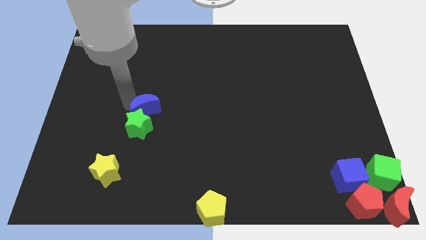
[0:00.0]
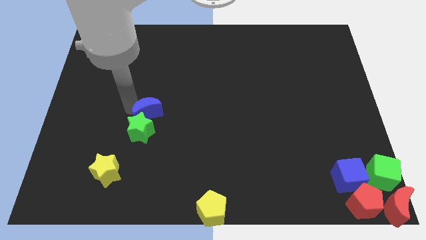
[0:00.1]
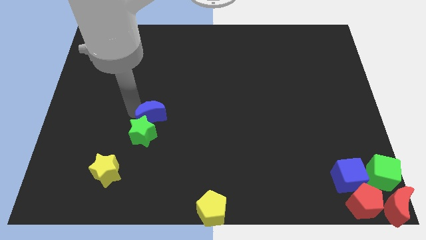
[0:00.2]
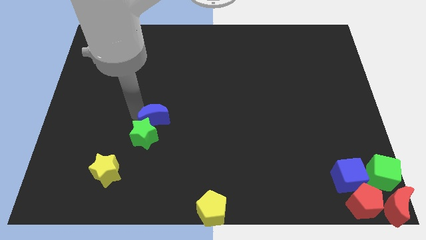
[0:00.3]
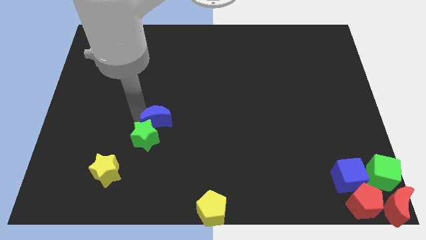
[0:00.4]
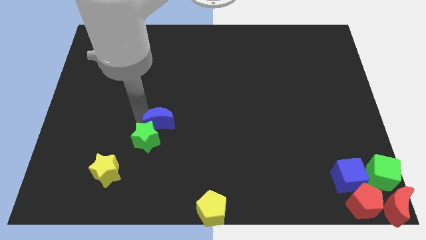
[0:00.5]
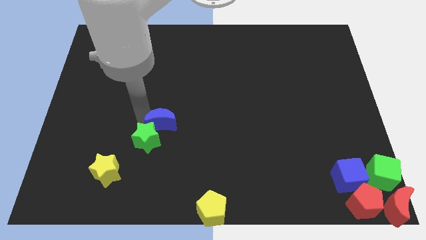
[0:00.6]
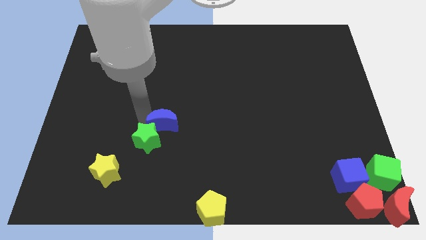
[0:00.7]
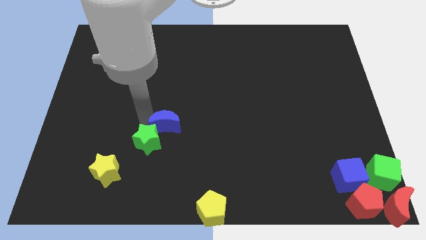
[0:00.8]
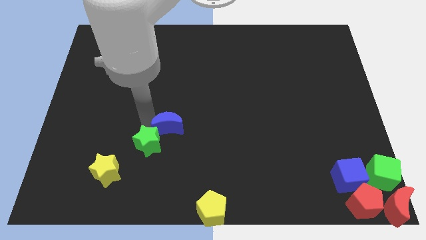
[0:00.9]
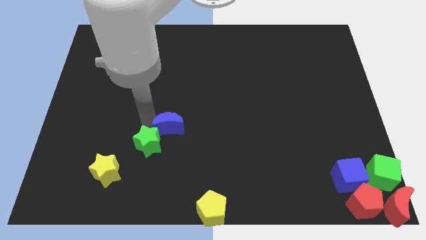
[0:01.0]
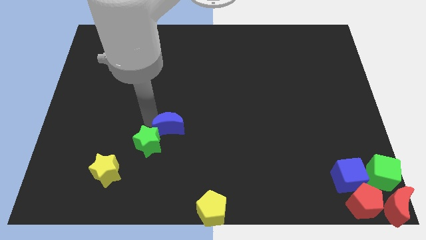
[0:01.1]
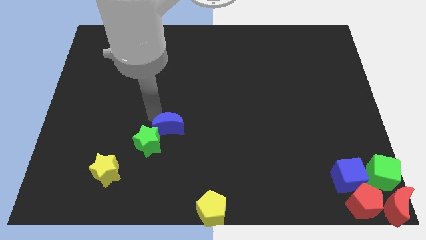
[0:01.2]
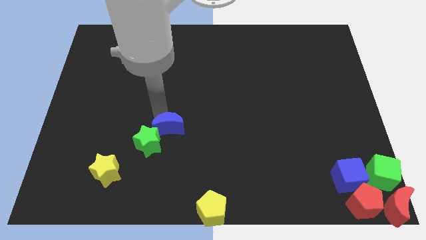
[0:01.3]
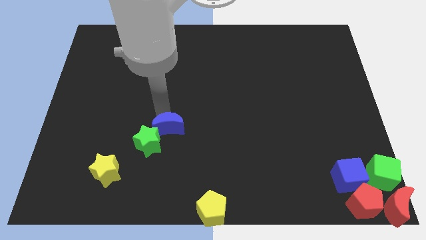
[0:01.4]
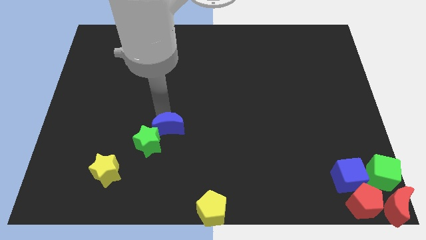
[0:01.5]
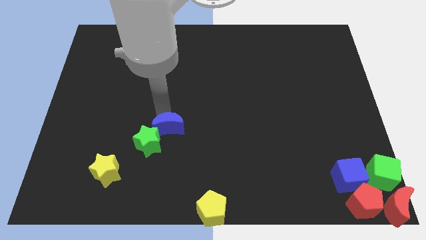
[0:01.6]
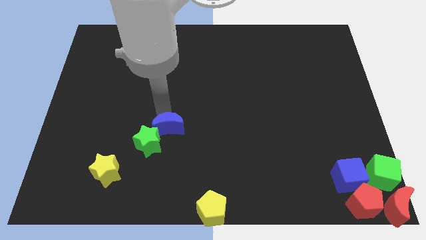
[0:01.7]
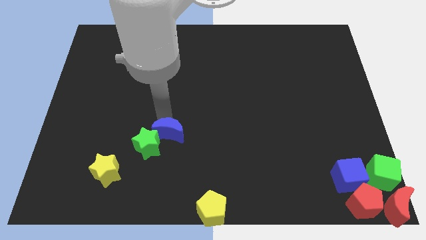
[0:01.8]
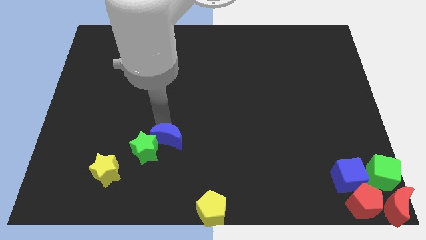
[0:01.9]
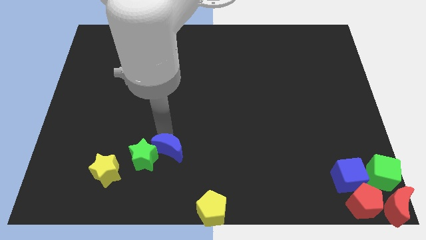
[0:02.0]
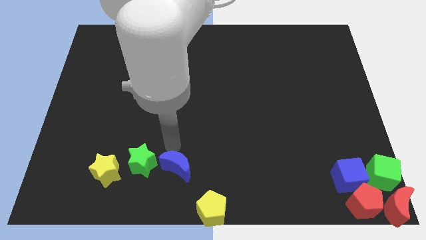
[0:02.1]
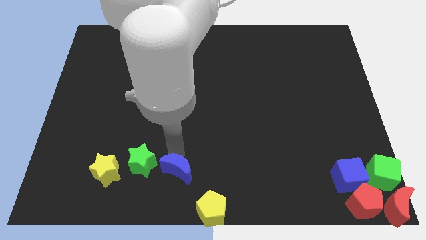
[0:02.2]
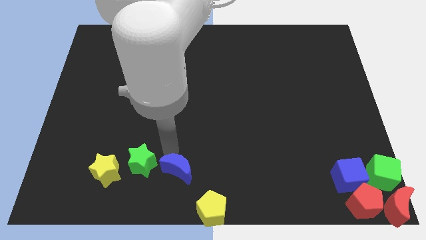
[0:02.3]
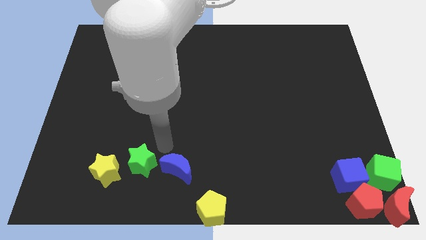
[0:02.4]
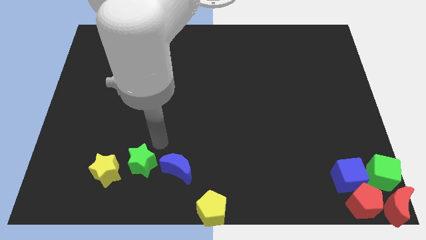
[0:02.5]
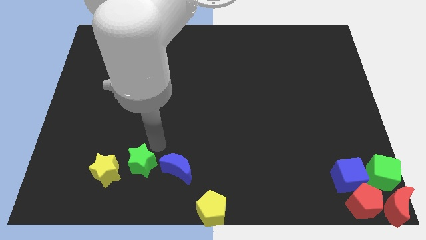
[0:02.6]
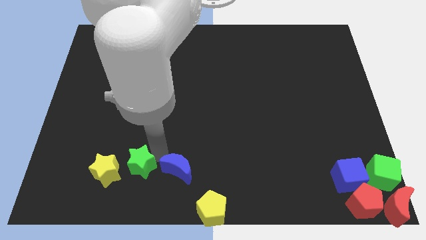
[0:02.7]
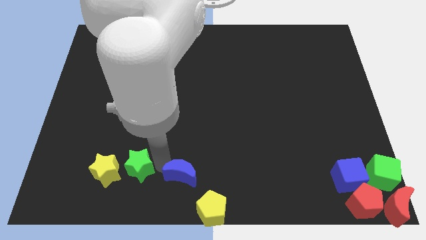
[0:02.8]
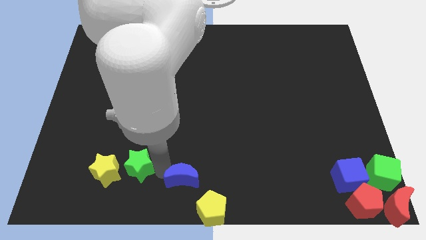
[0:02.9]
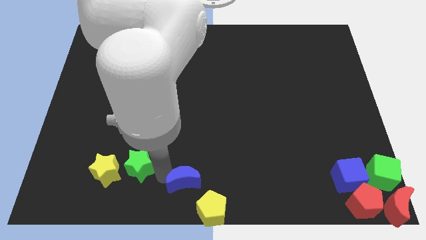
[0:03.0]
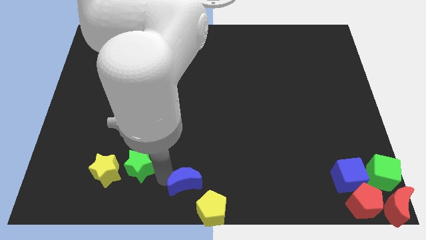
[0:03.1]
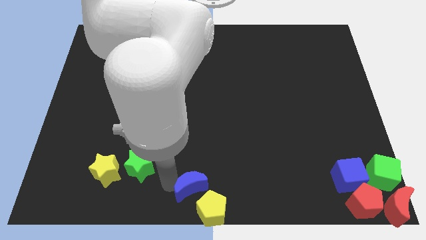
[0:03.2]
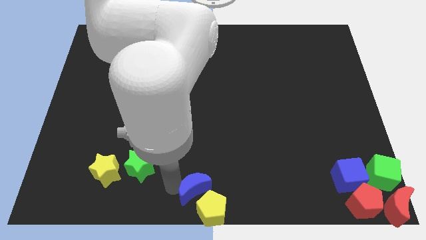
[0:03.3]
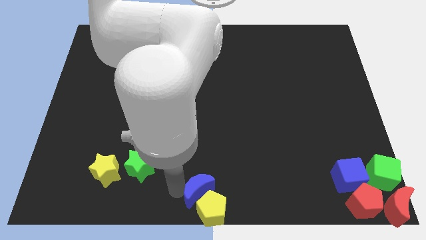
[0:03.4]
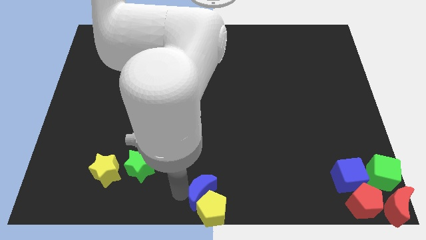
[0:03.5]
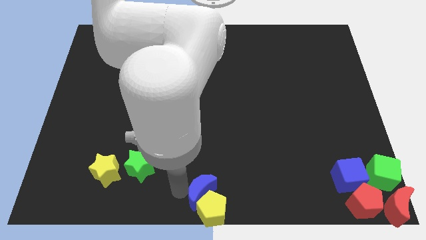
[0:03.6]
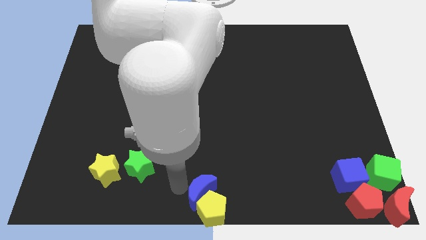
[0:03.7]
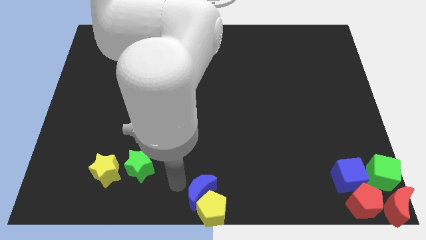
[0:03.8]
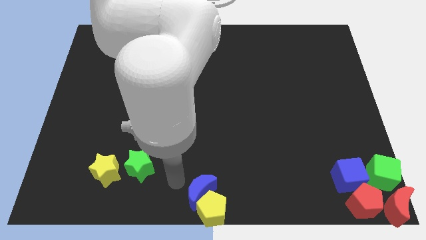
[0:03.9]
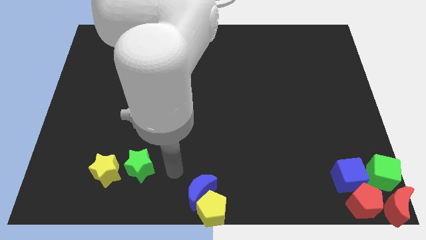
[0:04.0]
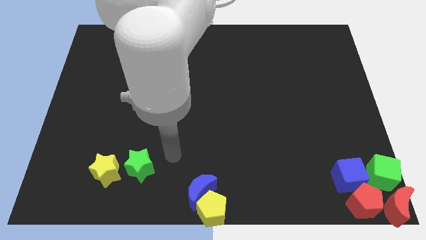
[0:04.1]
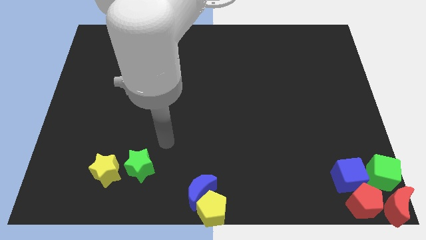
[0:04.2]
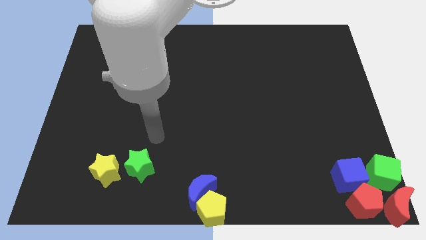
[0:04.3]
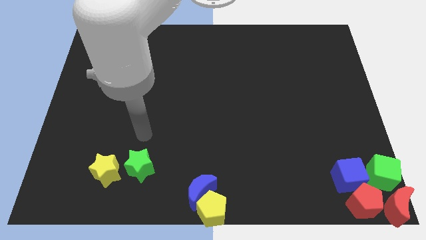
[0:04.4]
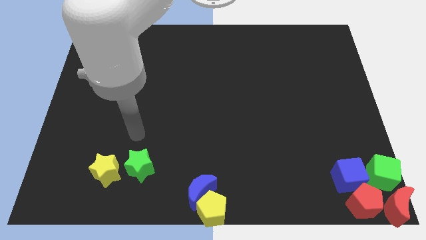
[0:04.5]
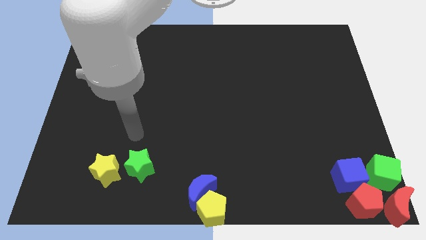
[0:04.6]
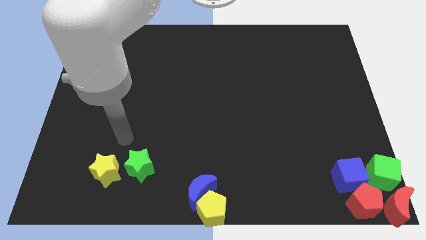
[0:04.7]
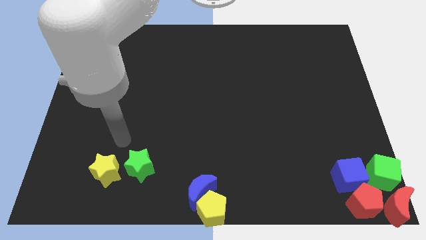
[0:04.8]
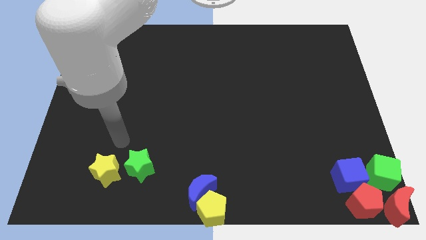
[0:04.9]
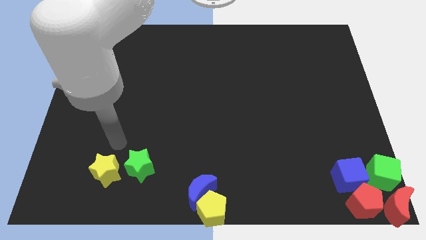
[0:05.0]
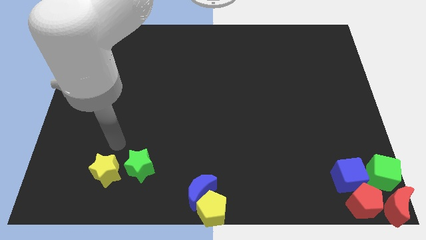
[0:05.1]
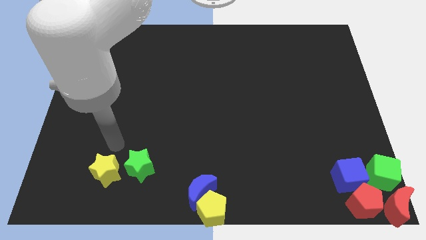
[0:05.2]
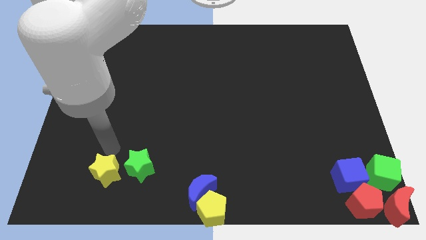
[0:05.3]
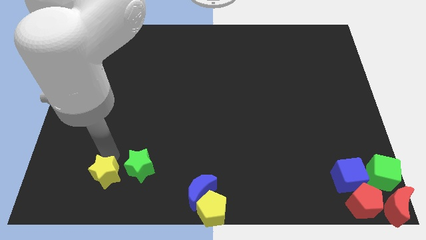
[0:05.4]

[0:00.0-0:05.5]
separate the blue moon from the green star

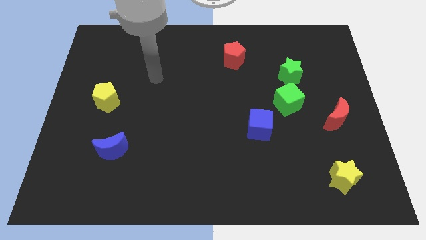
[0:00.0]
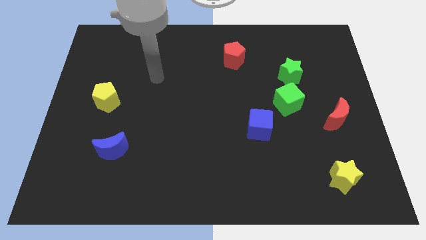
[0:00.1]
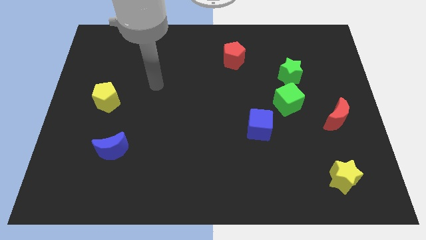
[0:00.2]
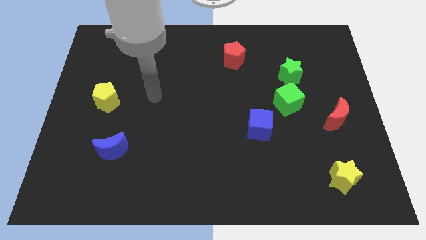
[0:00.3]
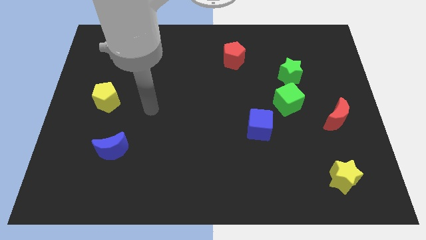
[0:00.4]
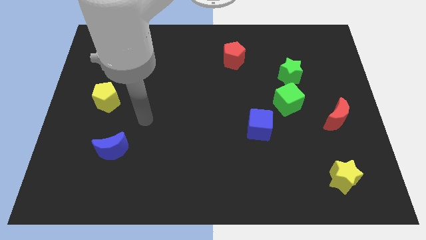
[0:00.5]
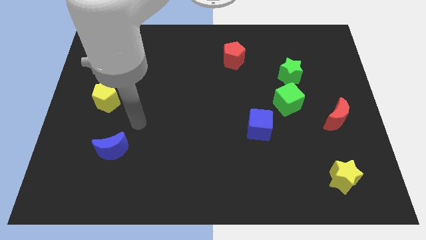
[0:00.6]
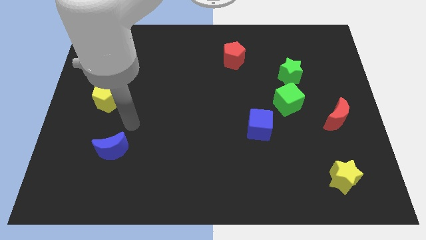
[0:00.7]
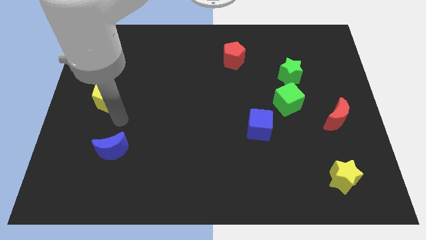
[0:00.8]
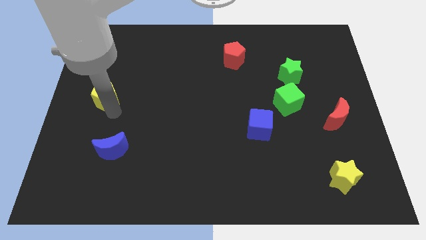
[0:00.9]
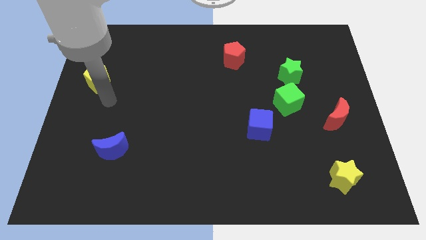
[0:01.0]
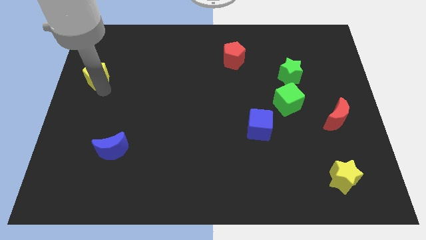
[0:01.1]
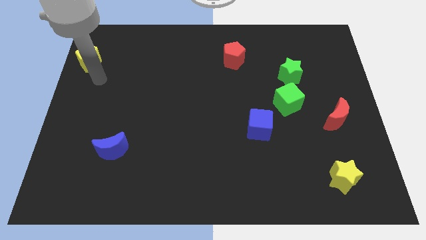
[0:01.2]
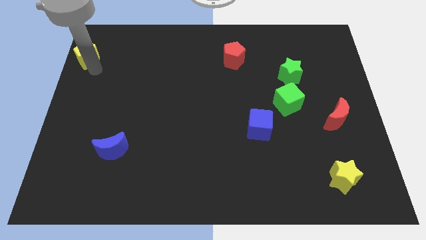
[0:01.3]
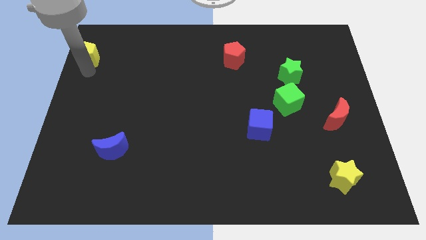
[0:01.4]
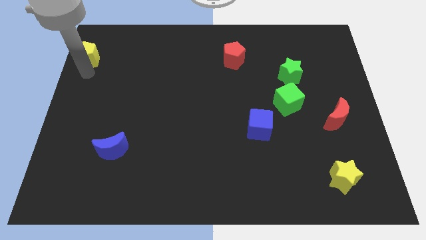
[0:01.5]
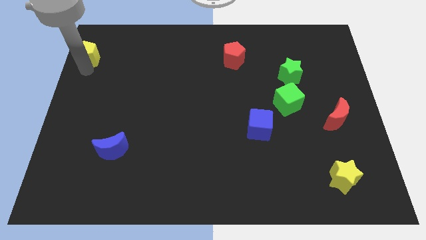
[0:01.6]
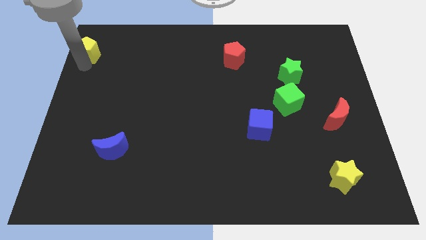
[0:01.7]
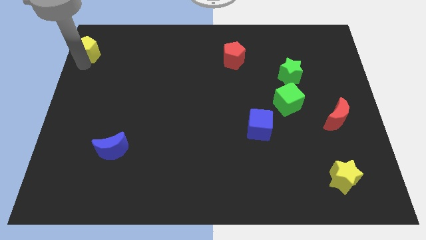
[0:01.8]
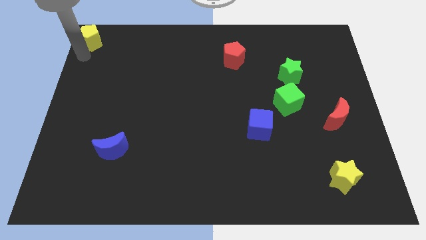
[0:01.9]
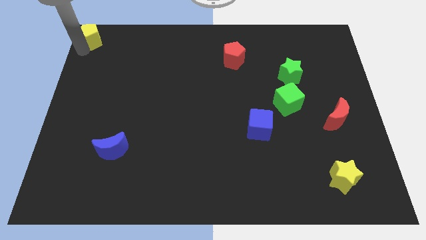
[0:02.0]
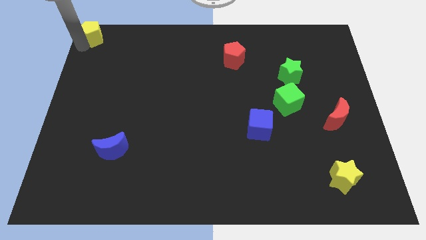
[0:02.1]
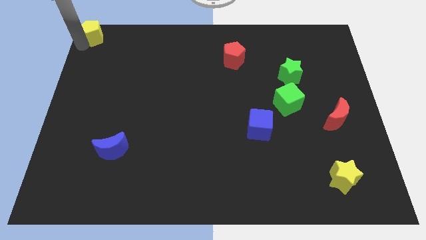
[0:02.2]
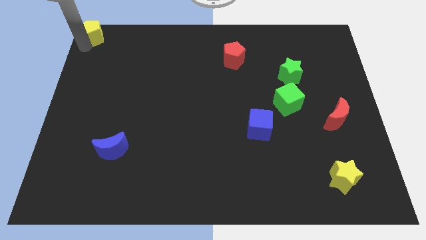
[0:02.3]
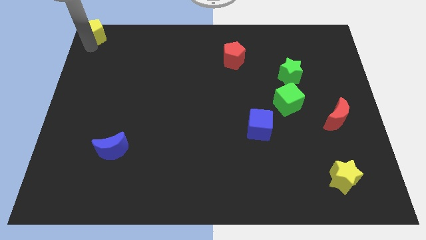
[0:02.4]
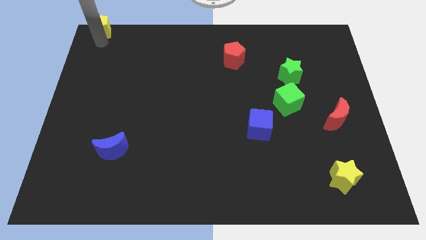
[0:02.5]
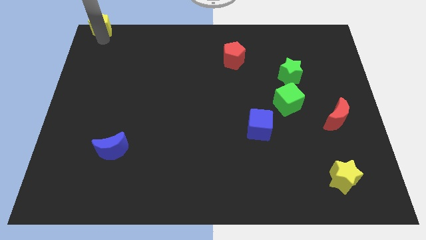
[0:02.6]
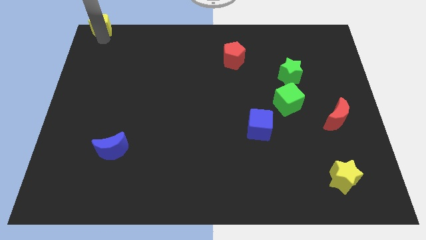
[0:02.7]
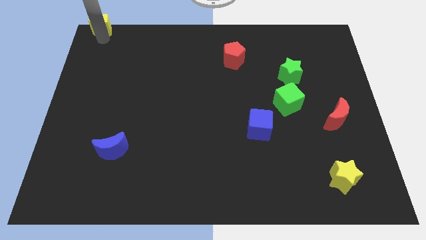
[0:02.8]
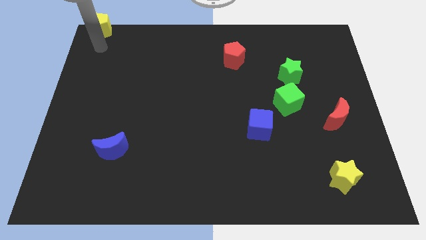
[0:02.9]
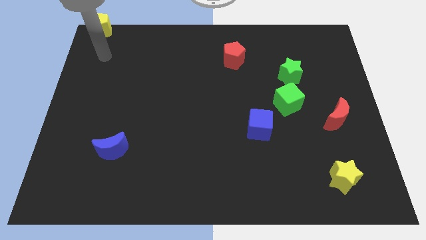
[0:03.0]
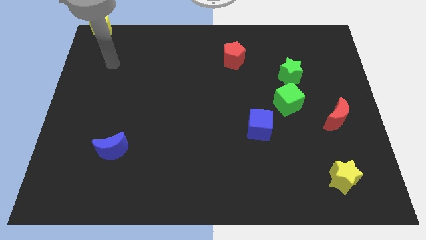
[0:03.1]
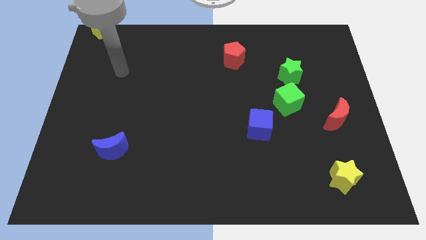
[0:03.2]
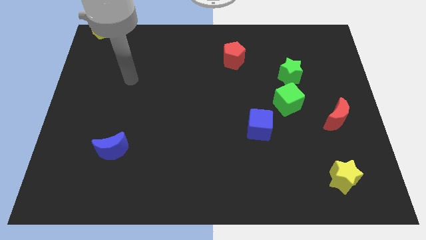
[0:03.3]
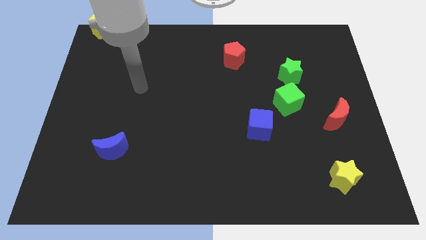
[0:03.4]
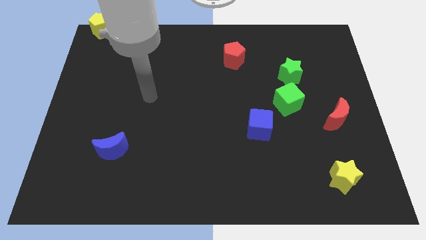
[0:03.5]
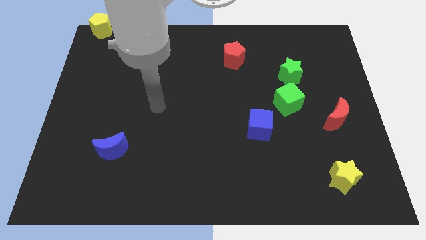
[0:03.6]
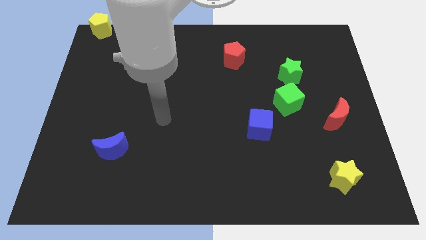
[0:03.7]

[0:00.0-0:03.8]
put the yellow pentagon at the top left corner
